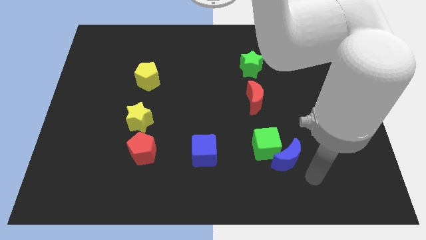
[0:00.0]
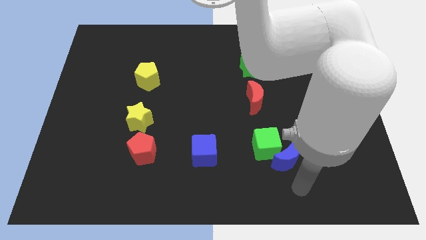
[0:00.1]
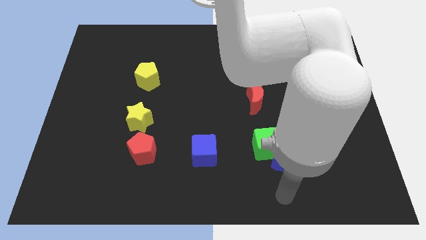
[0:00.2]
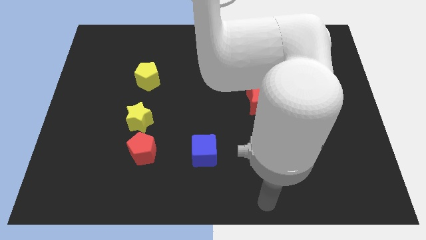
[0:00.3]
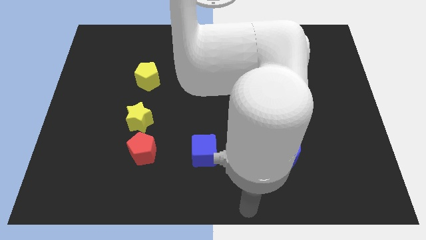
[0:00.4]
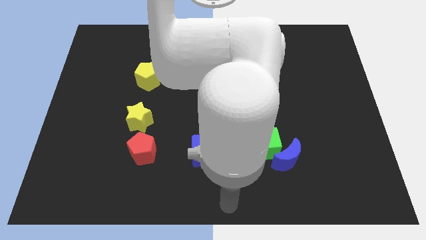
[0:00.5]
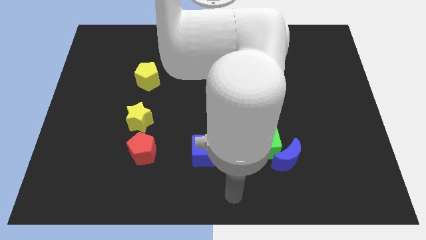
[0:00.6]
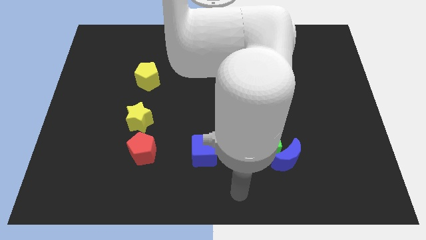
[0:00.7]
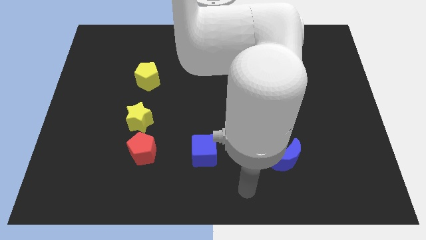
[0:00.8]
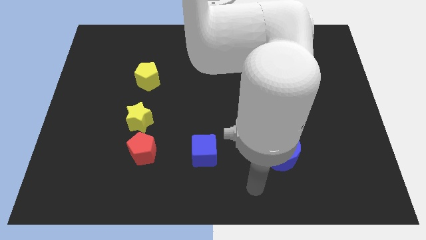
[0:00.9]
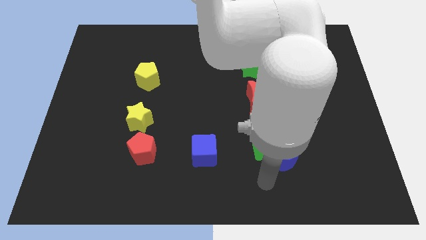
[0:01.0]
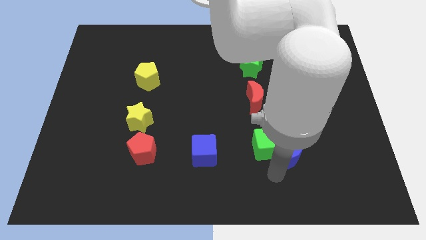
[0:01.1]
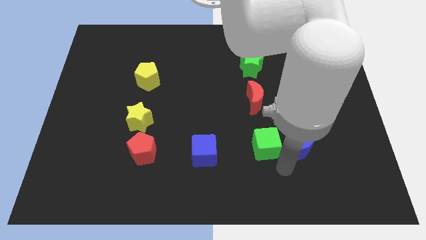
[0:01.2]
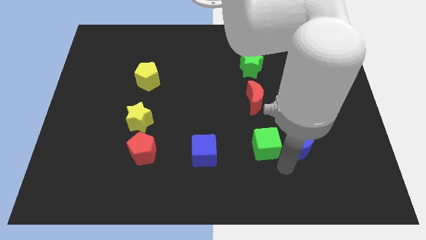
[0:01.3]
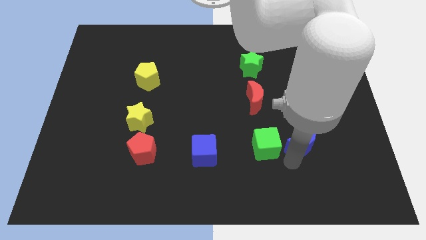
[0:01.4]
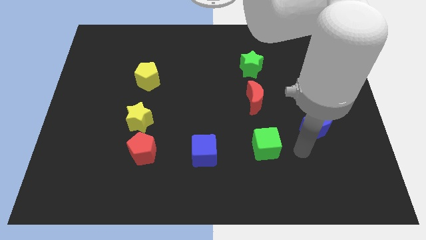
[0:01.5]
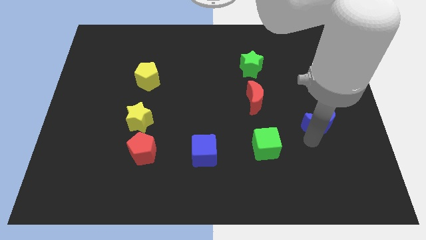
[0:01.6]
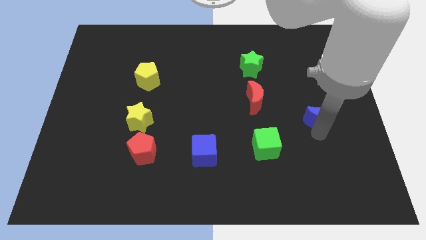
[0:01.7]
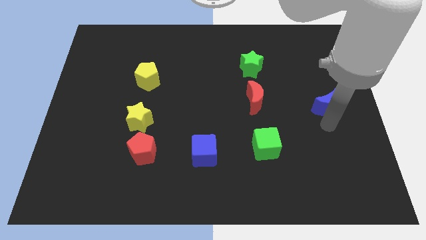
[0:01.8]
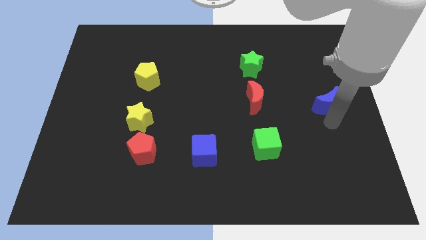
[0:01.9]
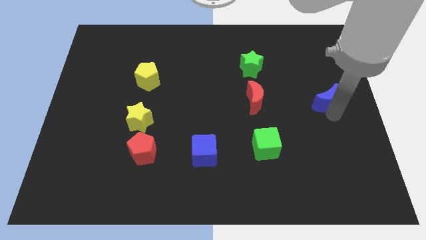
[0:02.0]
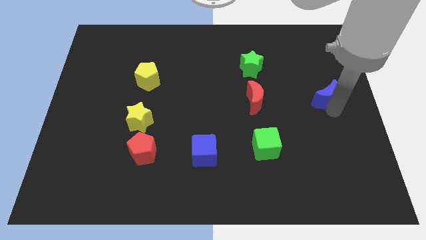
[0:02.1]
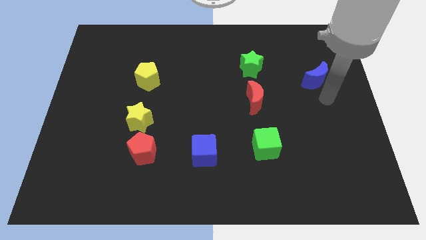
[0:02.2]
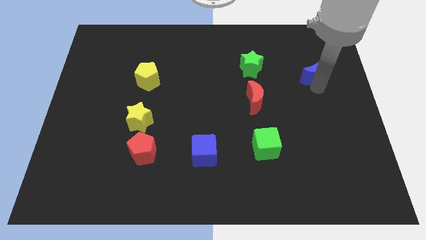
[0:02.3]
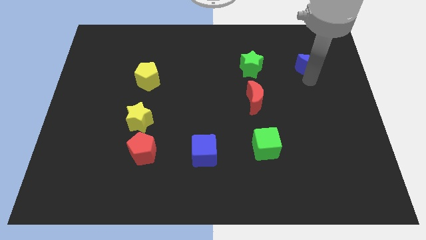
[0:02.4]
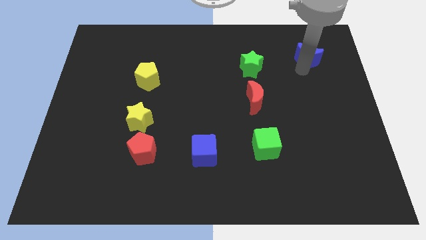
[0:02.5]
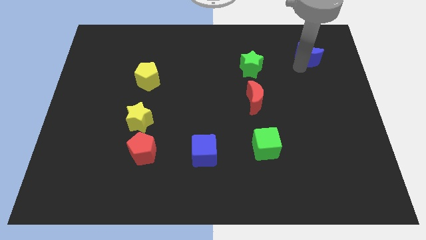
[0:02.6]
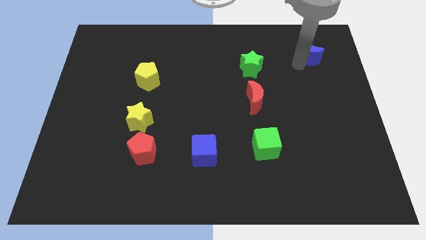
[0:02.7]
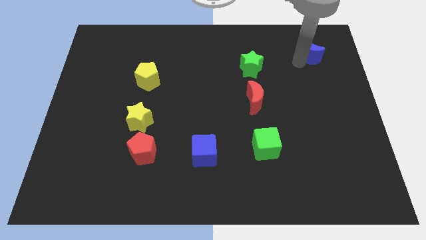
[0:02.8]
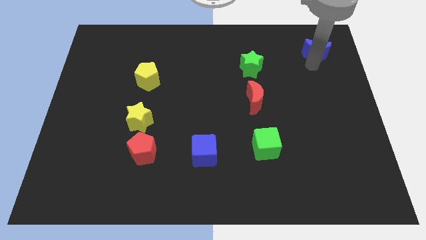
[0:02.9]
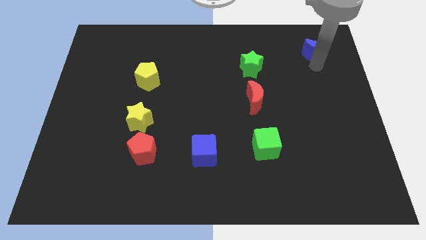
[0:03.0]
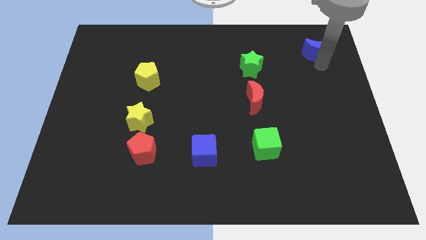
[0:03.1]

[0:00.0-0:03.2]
push the red moon towards top center

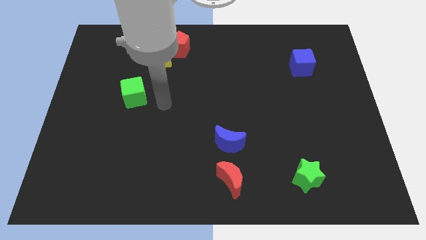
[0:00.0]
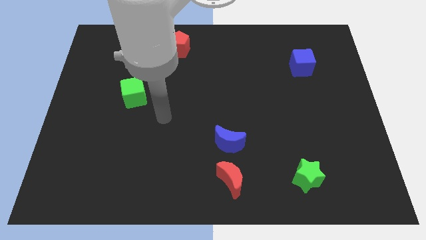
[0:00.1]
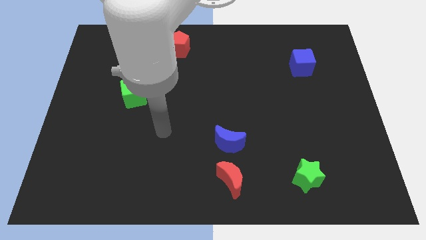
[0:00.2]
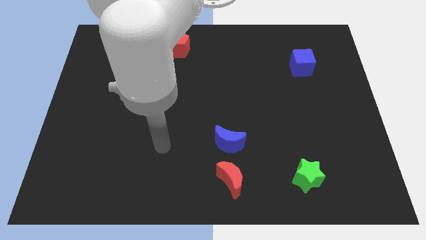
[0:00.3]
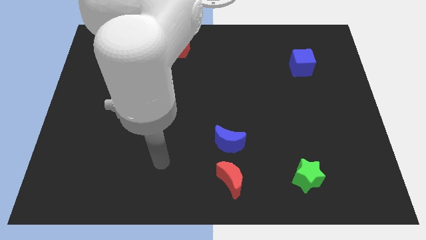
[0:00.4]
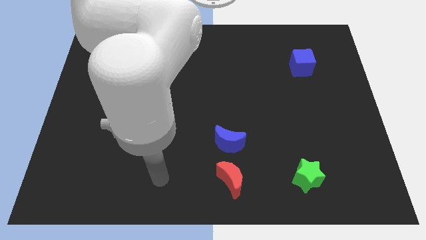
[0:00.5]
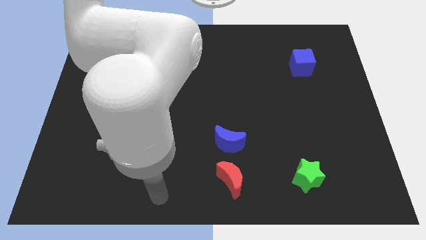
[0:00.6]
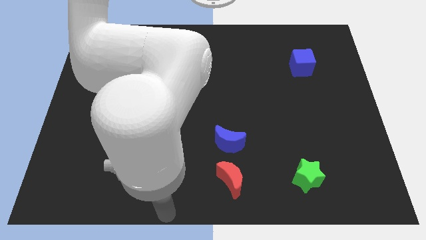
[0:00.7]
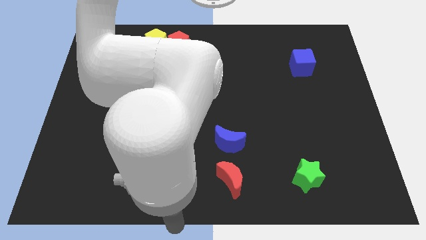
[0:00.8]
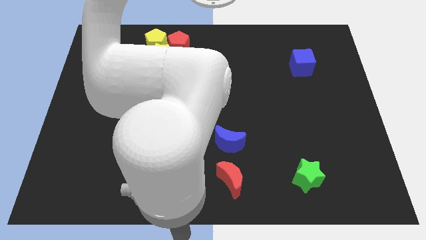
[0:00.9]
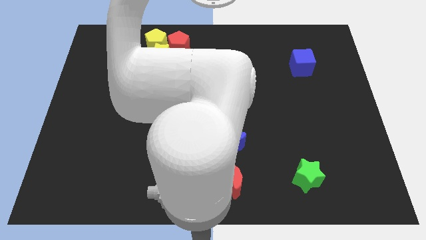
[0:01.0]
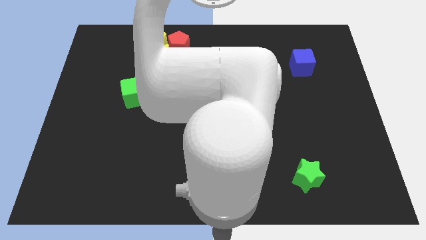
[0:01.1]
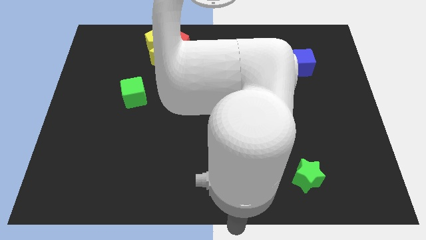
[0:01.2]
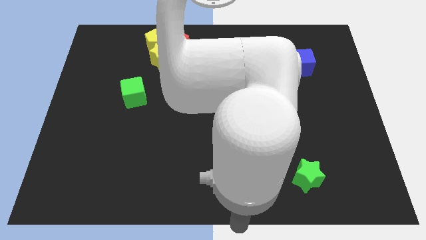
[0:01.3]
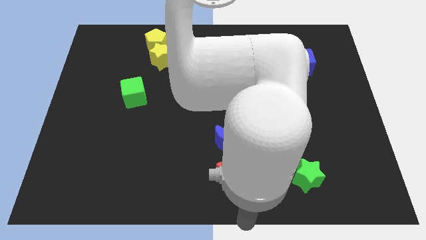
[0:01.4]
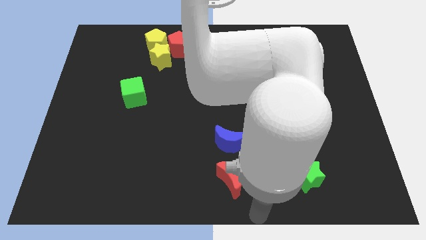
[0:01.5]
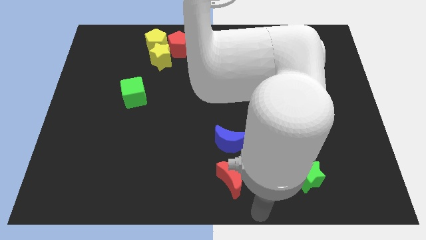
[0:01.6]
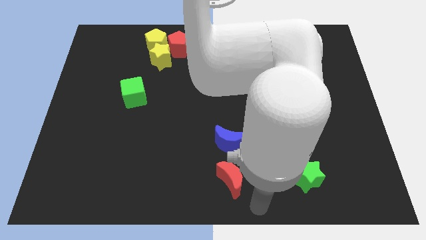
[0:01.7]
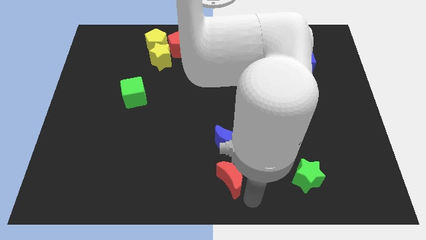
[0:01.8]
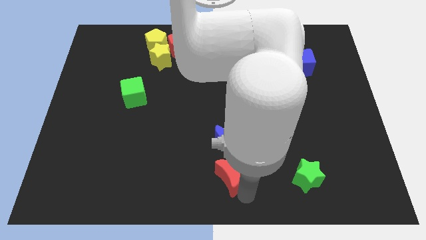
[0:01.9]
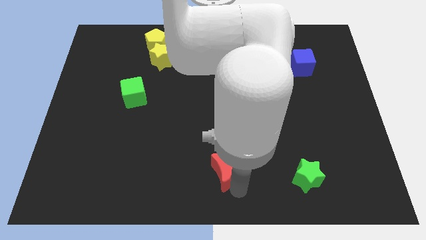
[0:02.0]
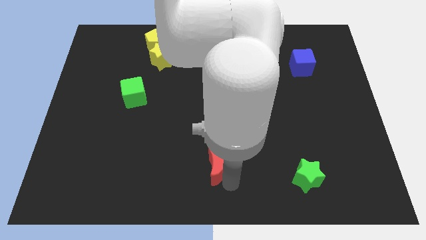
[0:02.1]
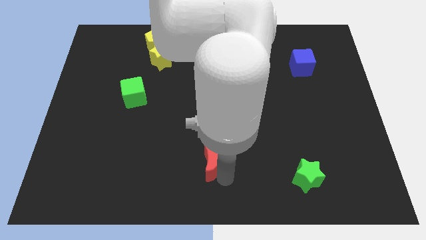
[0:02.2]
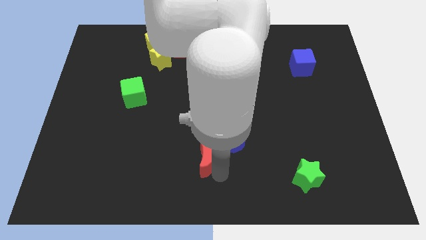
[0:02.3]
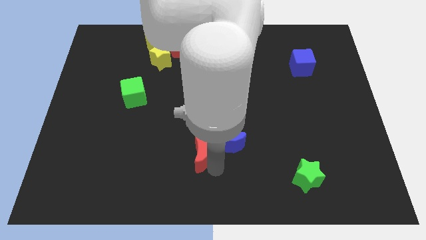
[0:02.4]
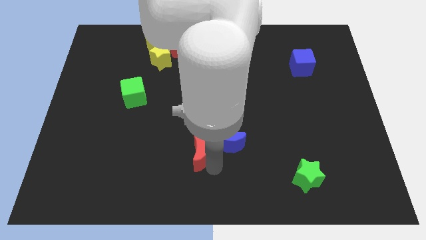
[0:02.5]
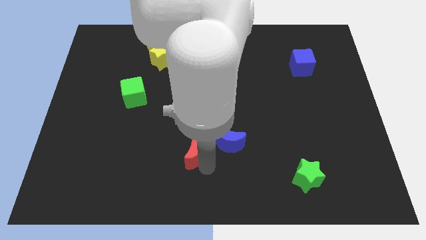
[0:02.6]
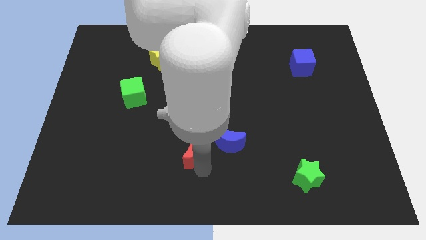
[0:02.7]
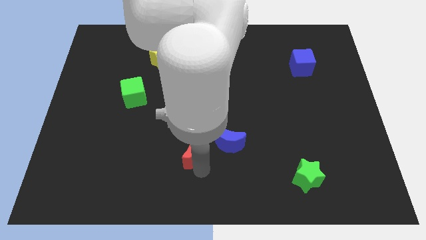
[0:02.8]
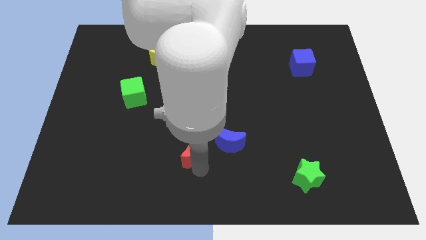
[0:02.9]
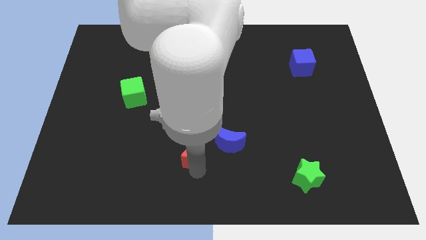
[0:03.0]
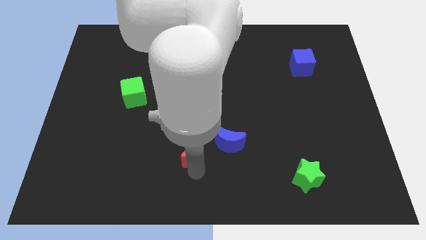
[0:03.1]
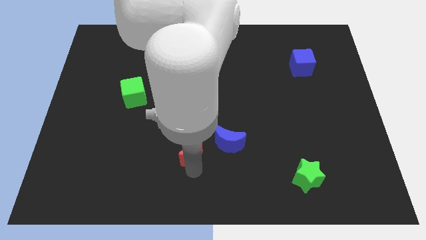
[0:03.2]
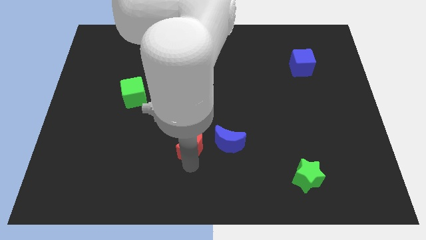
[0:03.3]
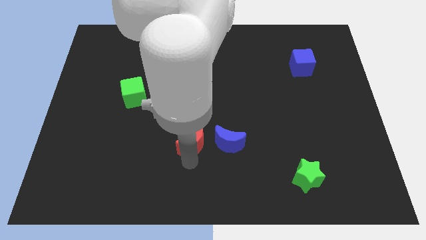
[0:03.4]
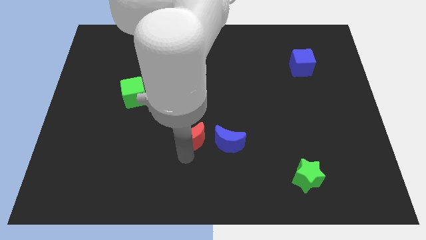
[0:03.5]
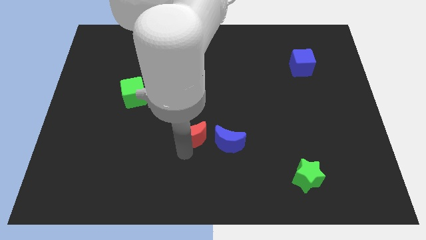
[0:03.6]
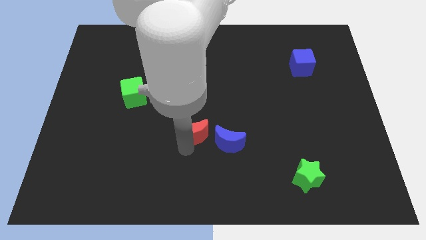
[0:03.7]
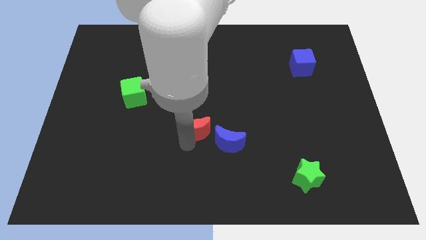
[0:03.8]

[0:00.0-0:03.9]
move the red crescent to the left of the blue crescent

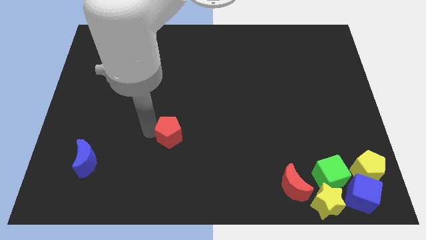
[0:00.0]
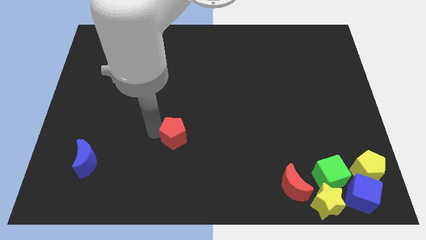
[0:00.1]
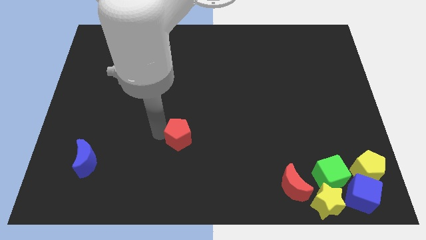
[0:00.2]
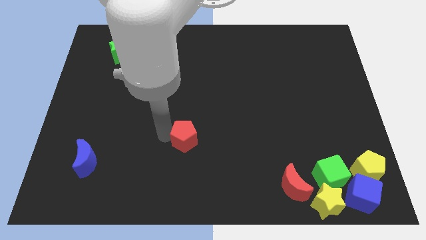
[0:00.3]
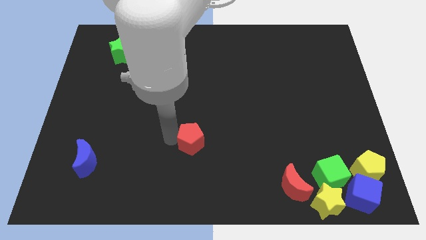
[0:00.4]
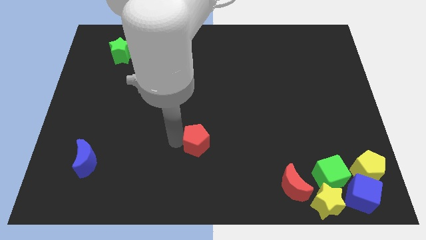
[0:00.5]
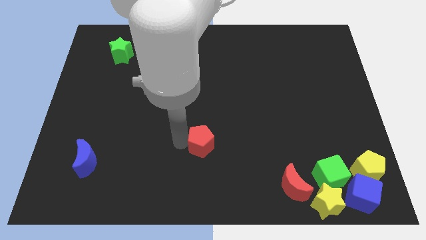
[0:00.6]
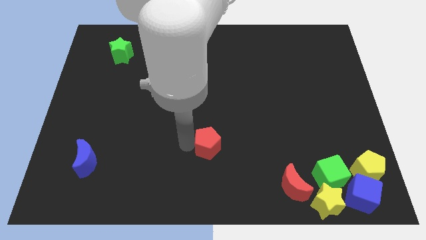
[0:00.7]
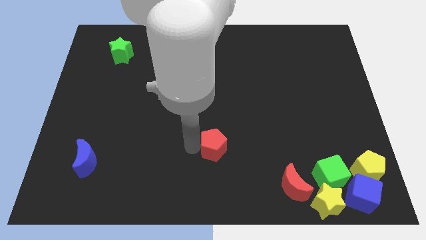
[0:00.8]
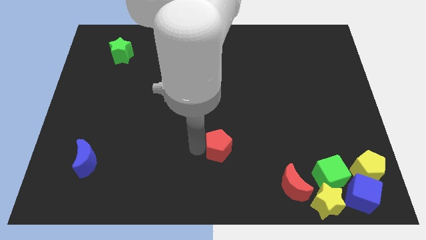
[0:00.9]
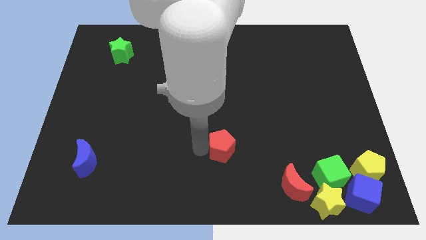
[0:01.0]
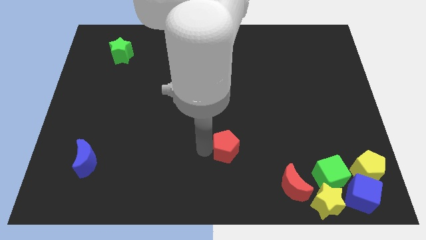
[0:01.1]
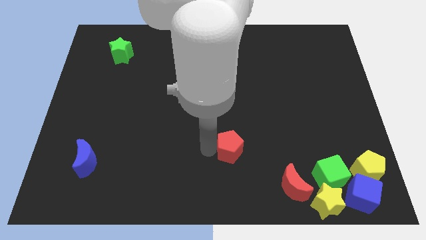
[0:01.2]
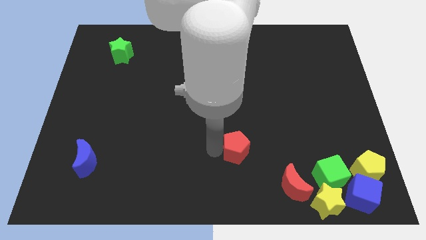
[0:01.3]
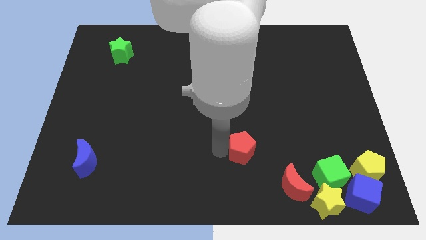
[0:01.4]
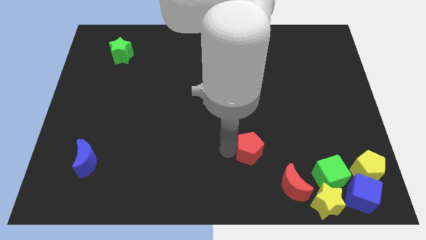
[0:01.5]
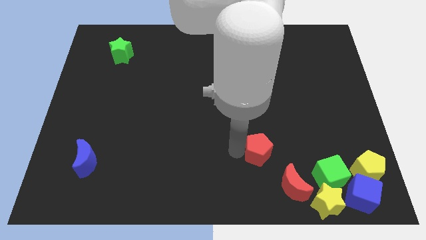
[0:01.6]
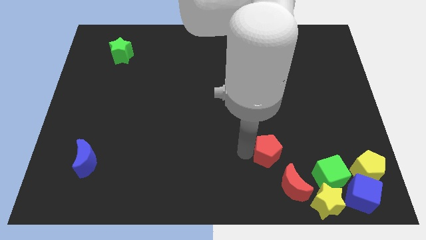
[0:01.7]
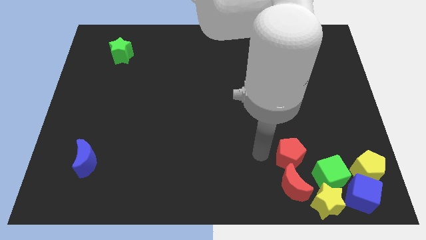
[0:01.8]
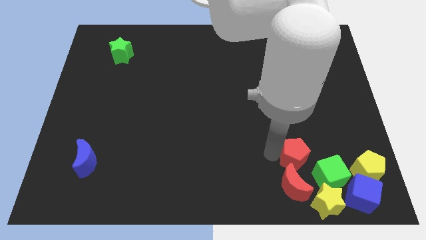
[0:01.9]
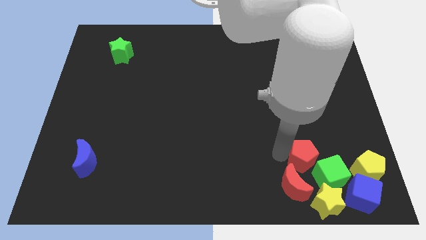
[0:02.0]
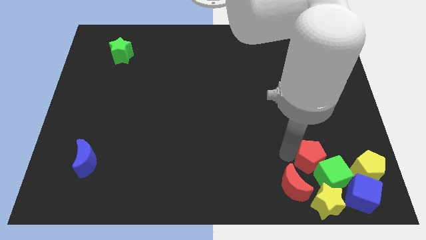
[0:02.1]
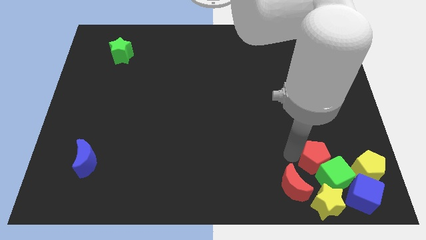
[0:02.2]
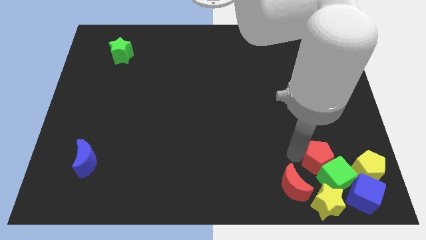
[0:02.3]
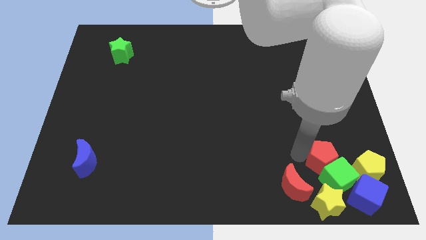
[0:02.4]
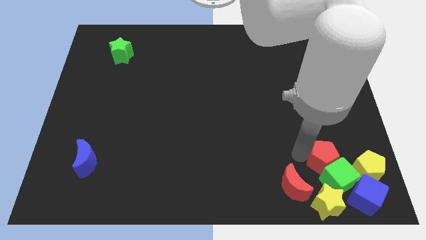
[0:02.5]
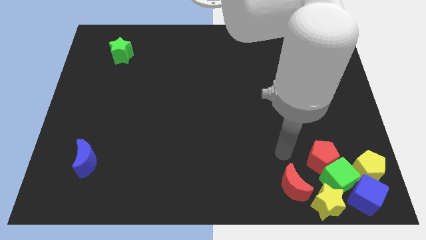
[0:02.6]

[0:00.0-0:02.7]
push the red pentagon into the green cube
